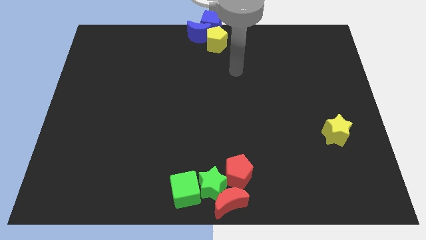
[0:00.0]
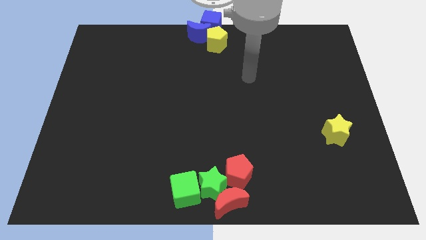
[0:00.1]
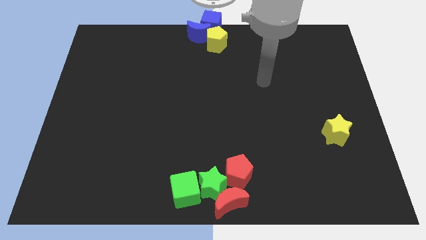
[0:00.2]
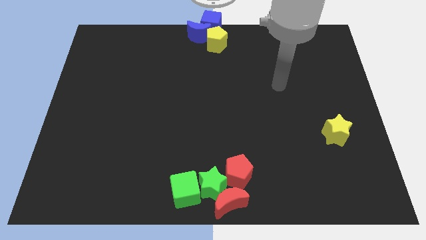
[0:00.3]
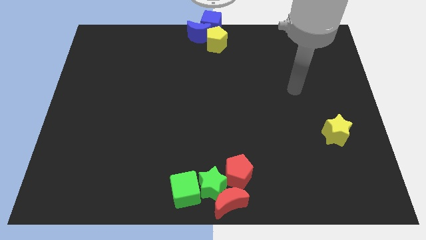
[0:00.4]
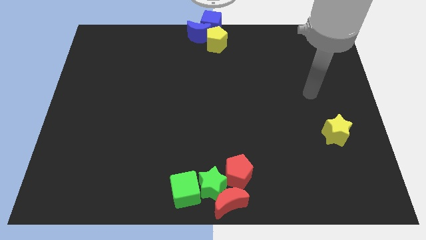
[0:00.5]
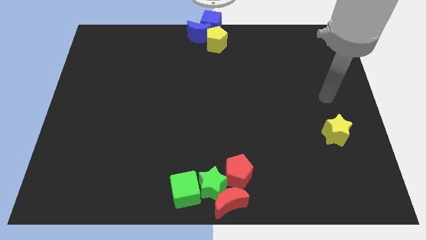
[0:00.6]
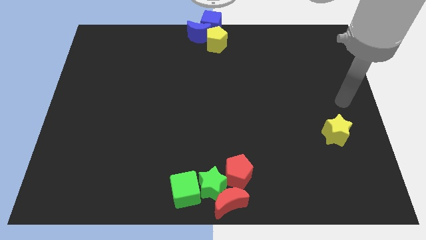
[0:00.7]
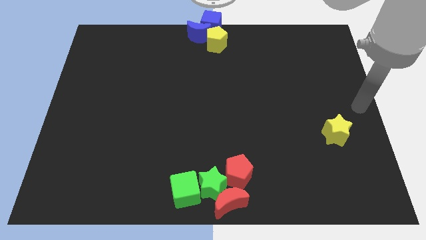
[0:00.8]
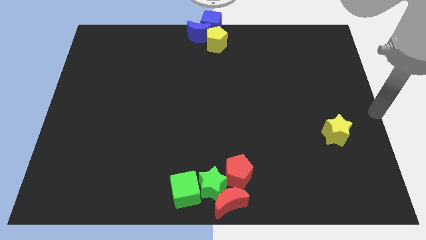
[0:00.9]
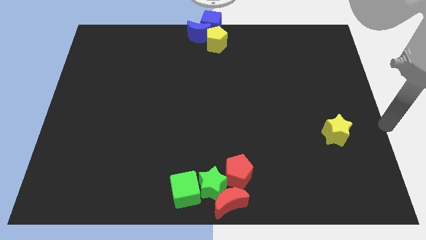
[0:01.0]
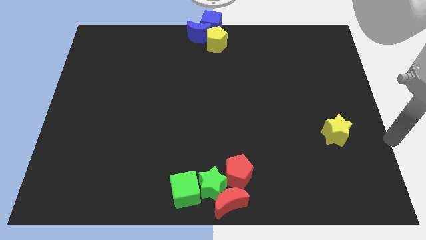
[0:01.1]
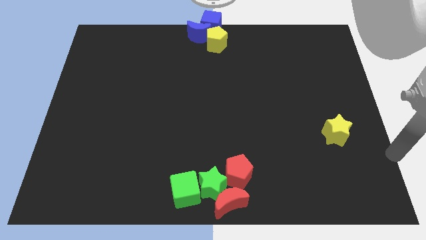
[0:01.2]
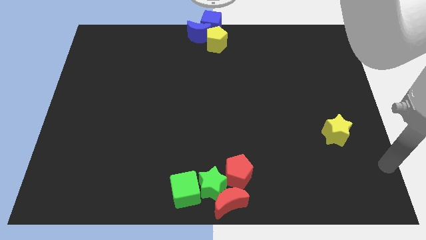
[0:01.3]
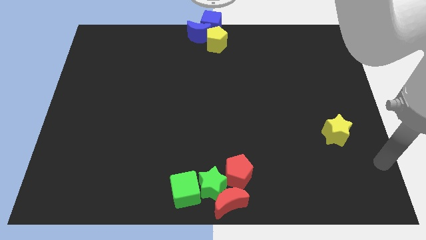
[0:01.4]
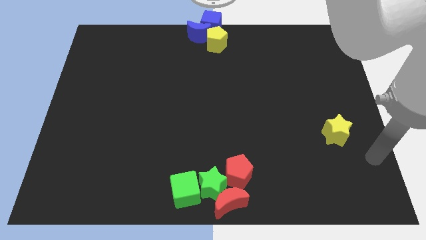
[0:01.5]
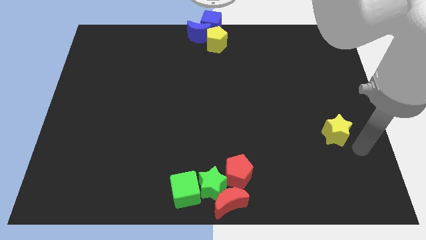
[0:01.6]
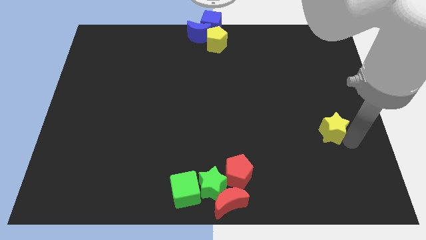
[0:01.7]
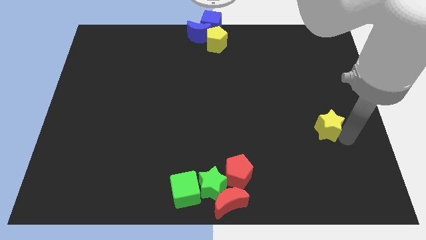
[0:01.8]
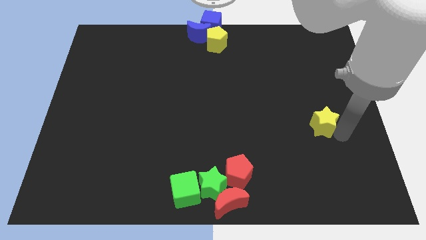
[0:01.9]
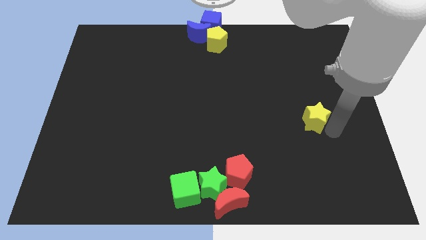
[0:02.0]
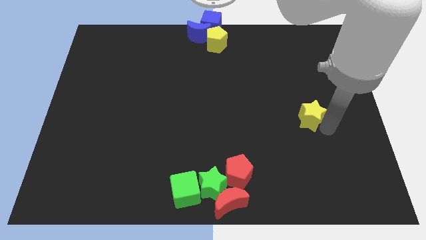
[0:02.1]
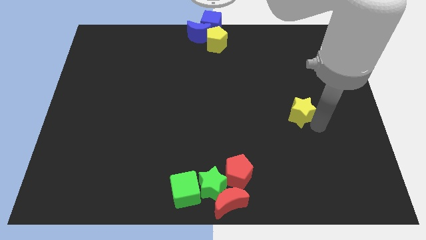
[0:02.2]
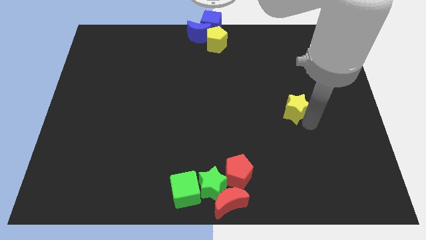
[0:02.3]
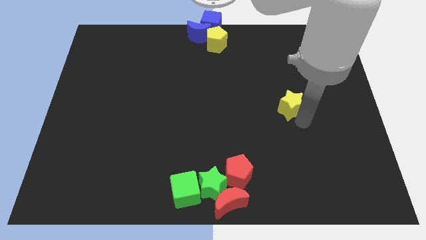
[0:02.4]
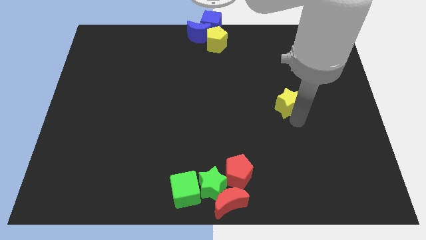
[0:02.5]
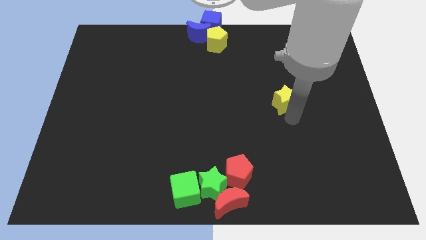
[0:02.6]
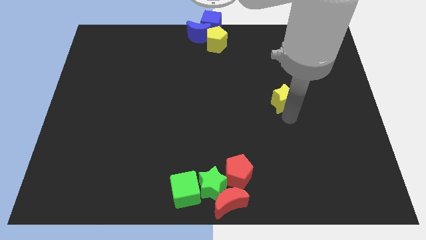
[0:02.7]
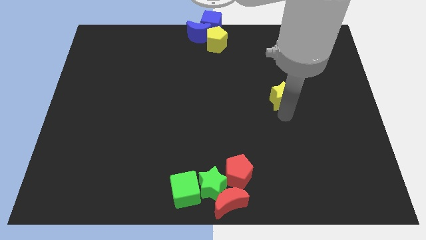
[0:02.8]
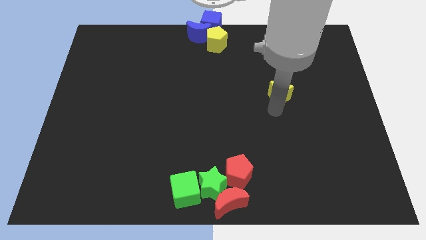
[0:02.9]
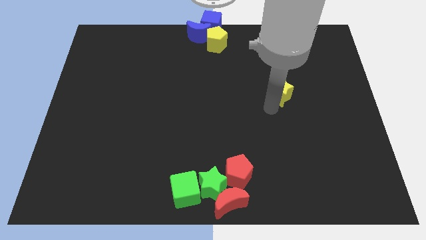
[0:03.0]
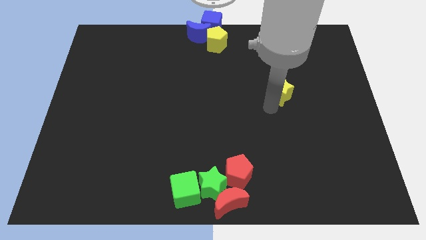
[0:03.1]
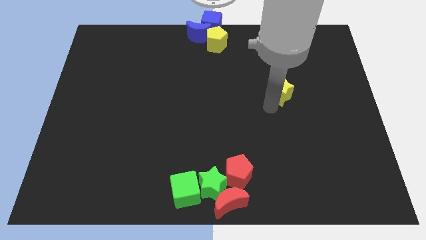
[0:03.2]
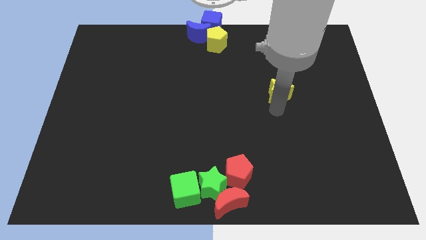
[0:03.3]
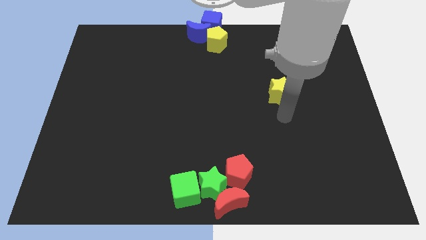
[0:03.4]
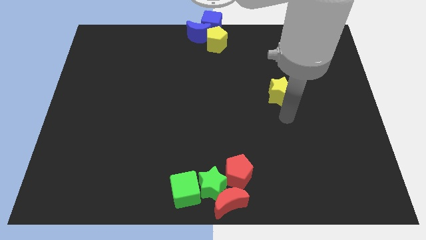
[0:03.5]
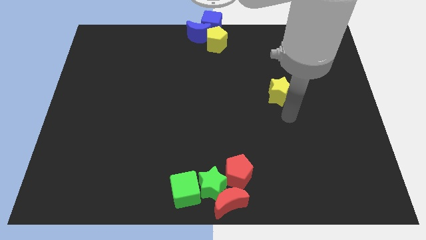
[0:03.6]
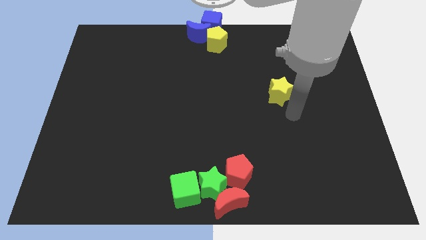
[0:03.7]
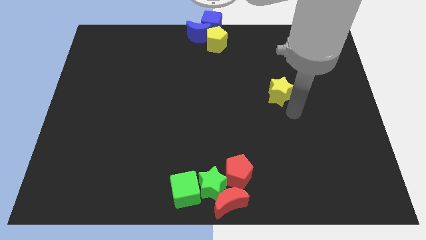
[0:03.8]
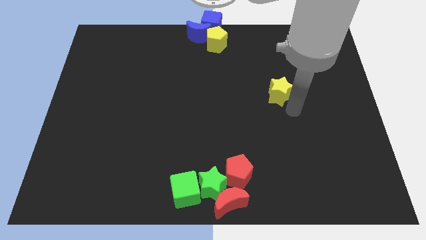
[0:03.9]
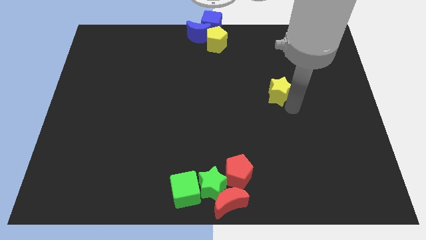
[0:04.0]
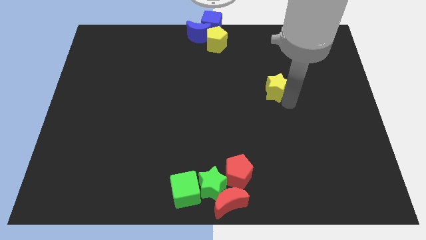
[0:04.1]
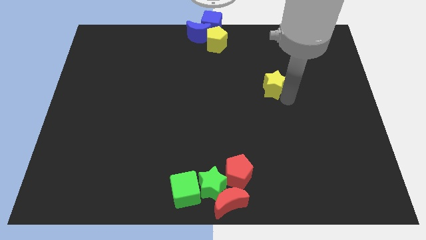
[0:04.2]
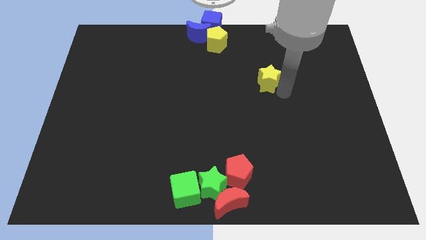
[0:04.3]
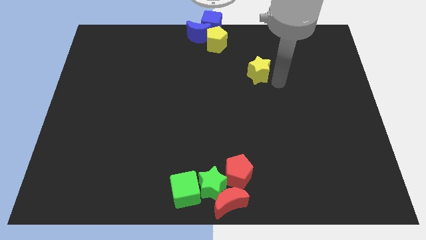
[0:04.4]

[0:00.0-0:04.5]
slide the yellow star towards the yellow pentagon

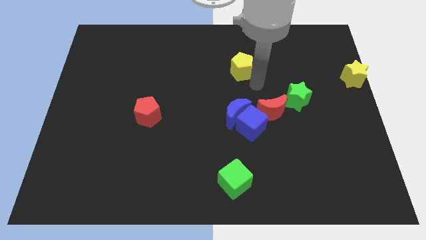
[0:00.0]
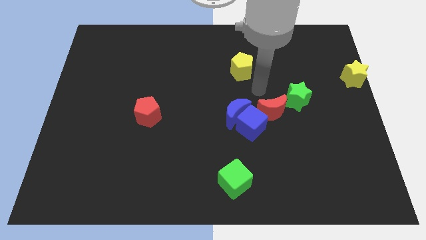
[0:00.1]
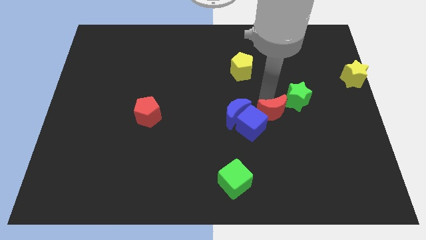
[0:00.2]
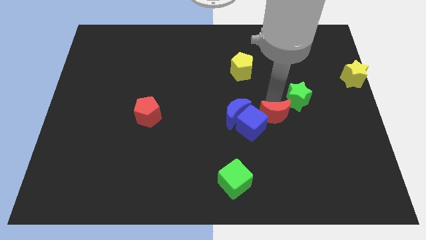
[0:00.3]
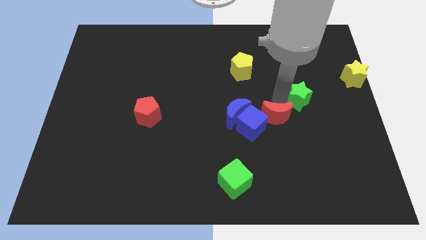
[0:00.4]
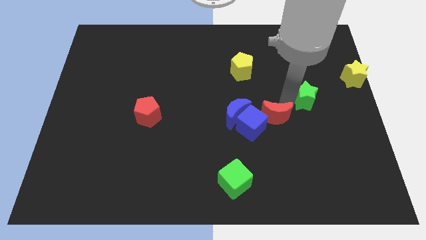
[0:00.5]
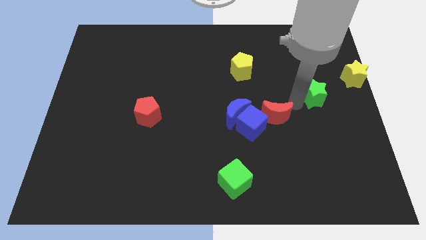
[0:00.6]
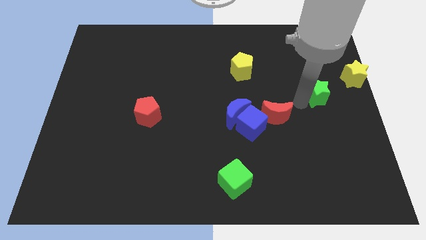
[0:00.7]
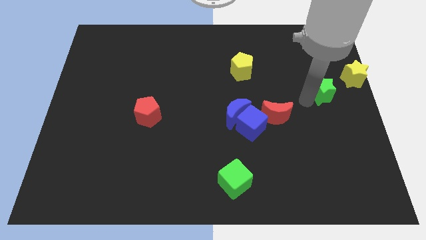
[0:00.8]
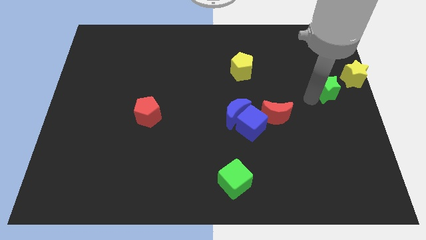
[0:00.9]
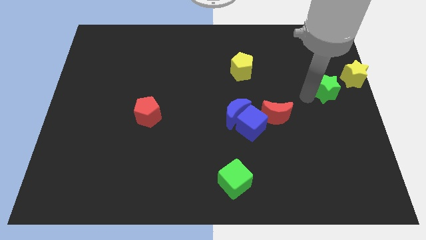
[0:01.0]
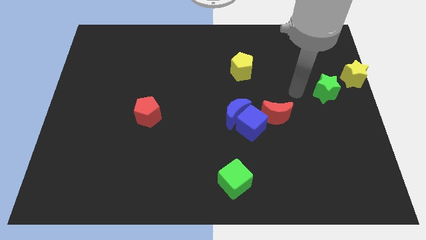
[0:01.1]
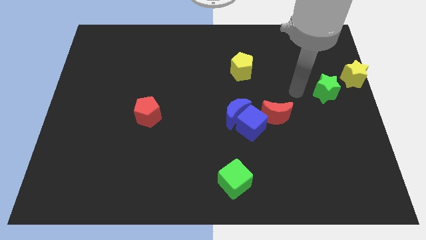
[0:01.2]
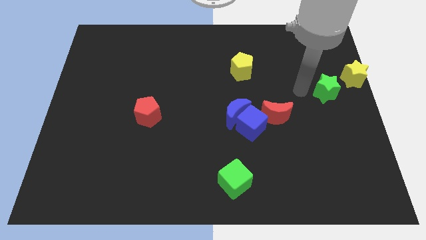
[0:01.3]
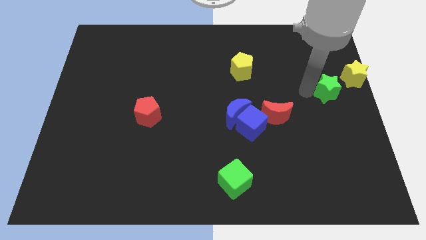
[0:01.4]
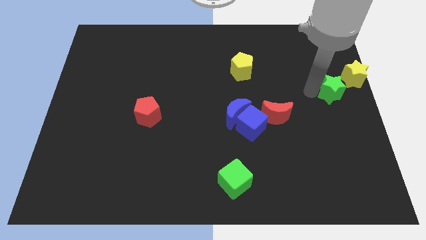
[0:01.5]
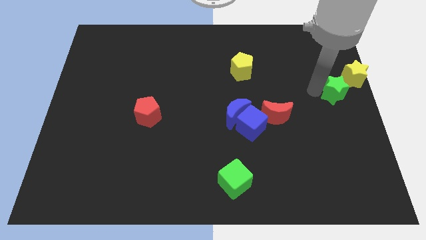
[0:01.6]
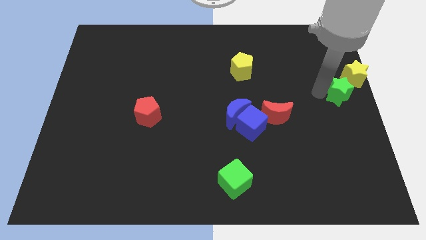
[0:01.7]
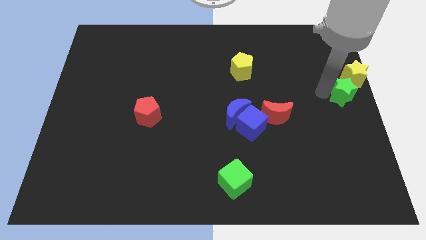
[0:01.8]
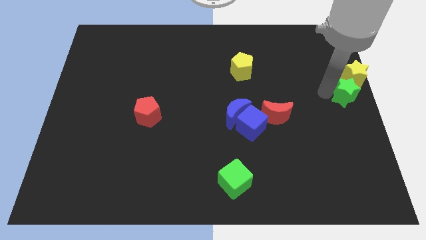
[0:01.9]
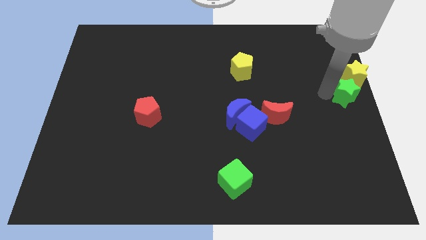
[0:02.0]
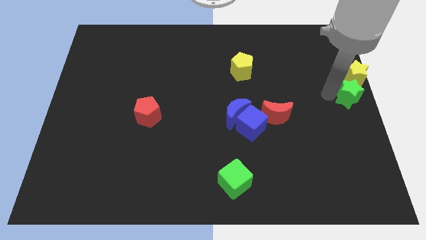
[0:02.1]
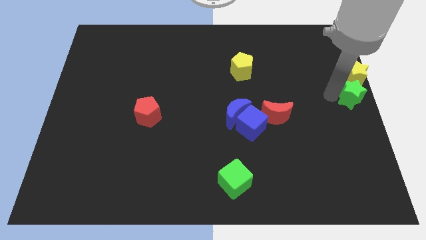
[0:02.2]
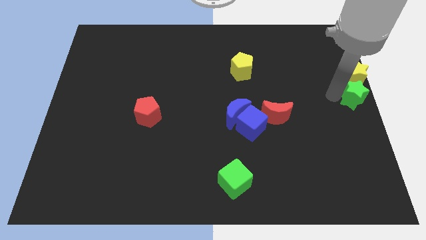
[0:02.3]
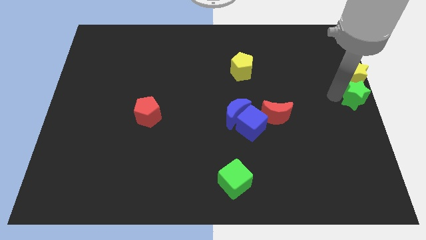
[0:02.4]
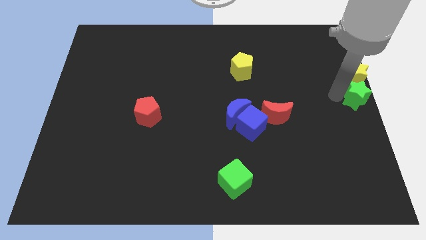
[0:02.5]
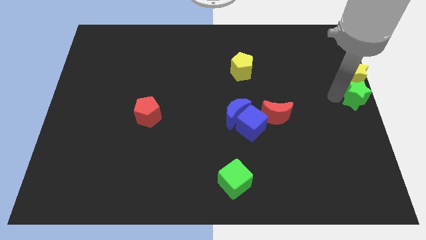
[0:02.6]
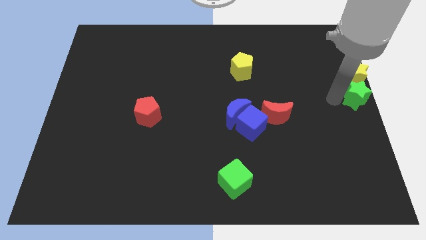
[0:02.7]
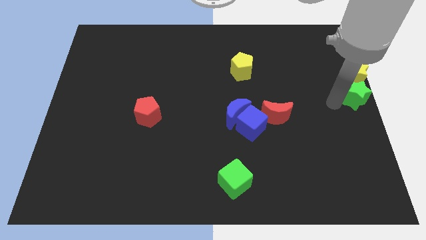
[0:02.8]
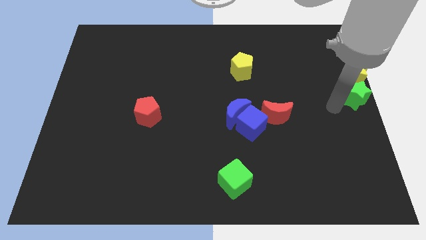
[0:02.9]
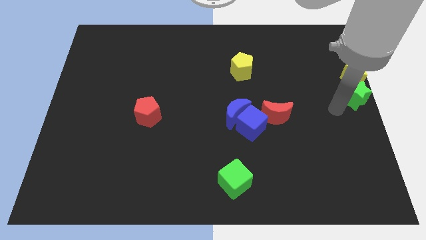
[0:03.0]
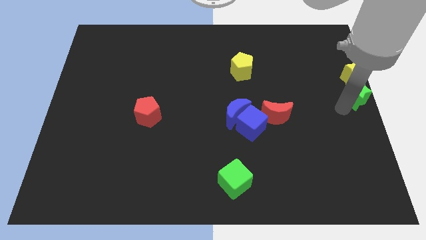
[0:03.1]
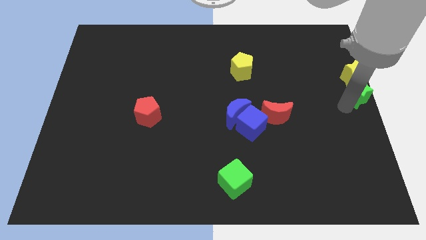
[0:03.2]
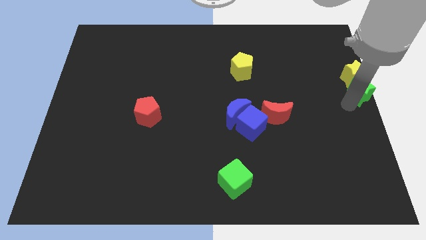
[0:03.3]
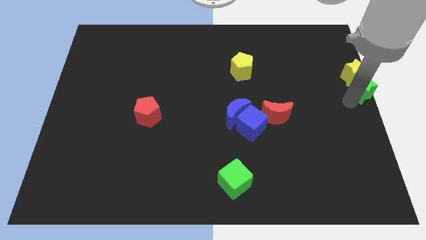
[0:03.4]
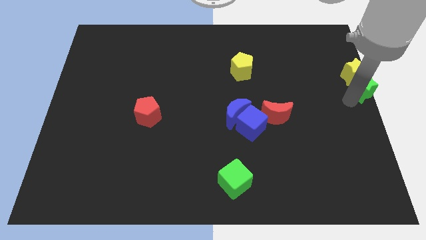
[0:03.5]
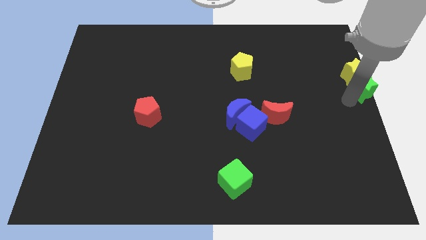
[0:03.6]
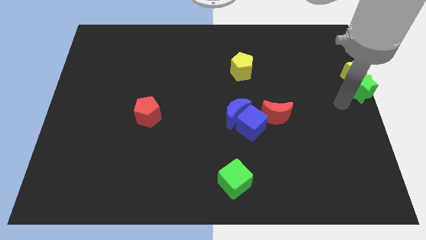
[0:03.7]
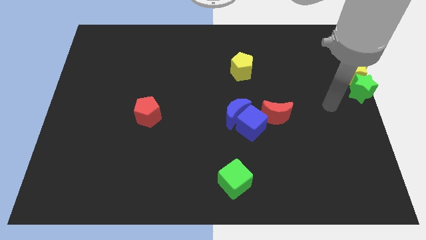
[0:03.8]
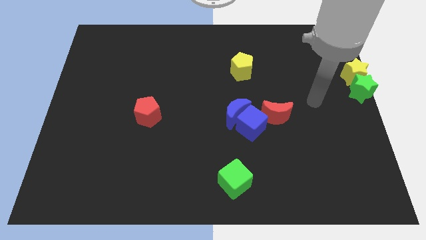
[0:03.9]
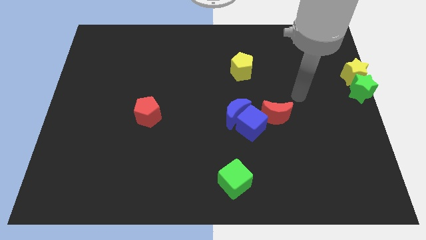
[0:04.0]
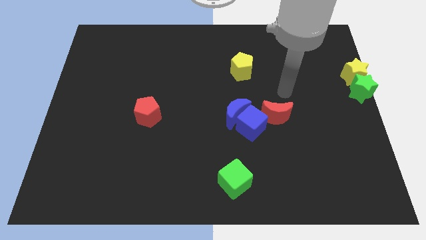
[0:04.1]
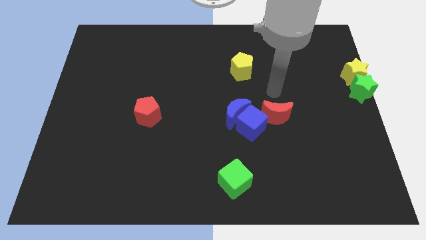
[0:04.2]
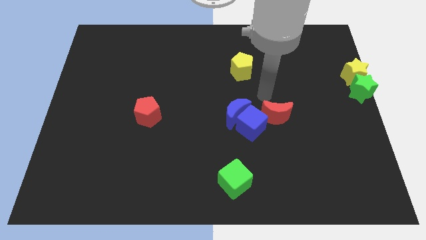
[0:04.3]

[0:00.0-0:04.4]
place green star down to the yellow star
